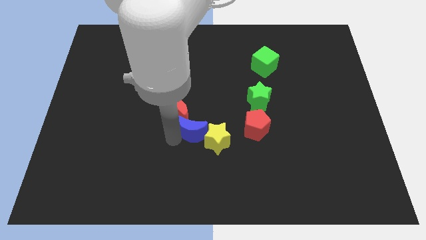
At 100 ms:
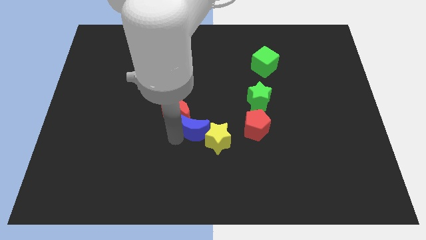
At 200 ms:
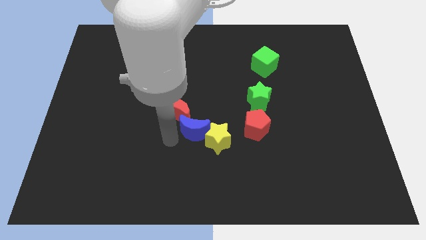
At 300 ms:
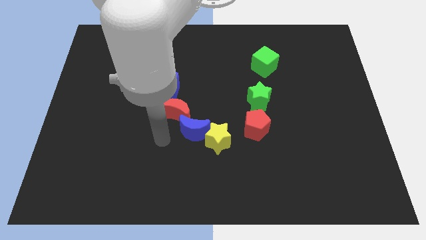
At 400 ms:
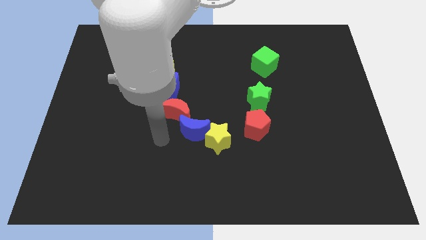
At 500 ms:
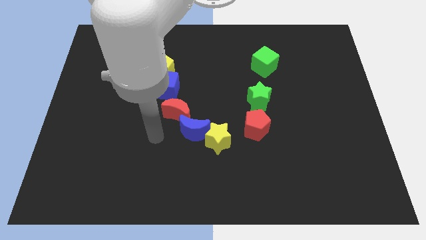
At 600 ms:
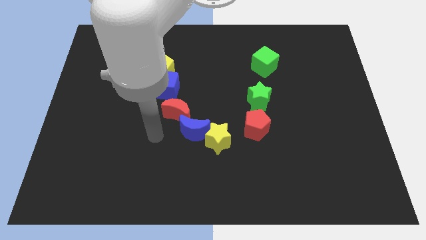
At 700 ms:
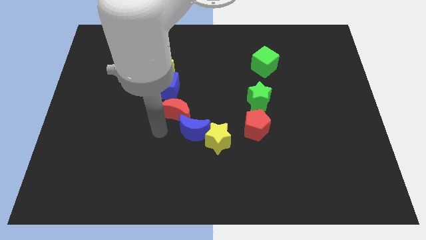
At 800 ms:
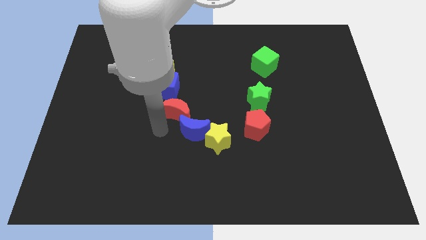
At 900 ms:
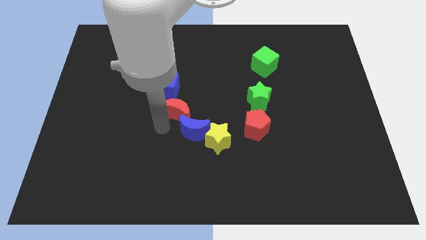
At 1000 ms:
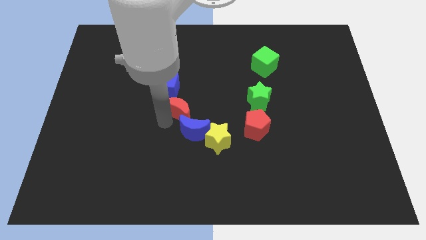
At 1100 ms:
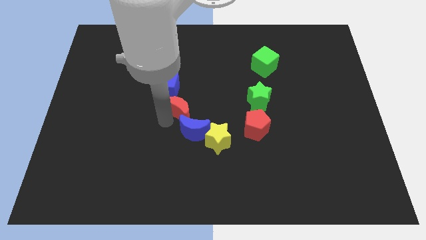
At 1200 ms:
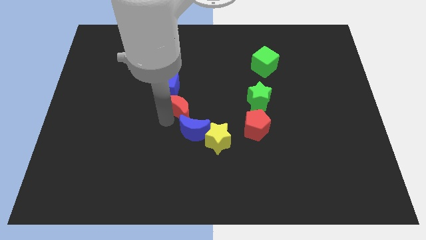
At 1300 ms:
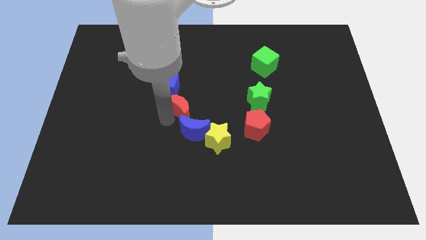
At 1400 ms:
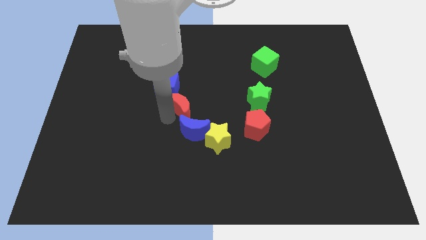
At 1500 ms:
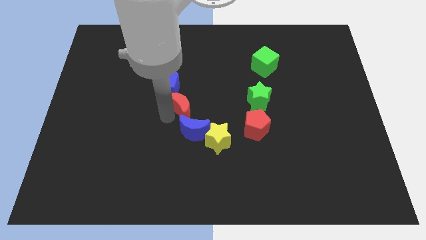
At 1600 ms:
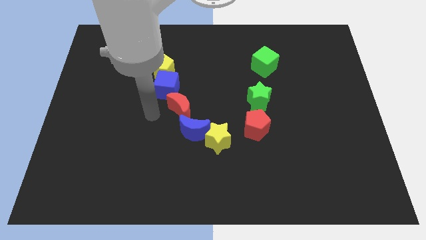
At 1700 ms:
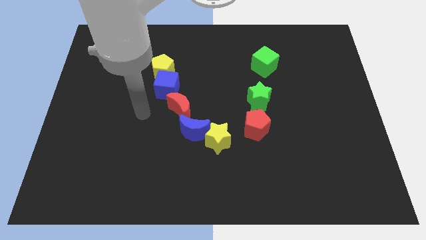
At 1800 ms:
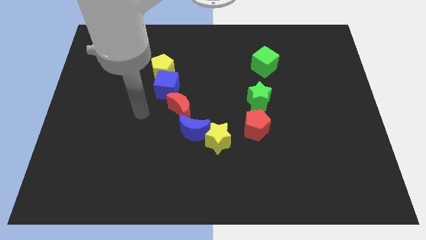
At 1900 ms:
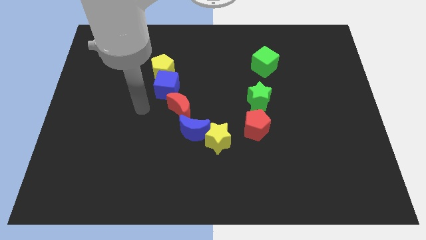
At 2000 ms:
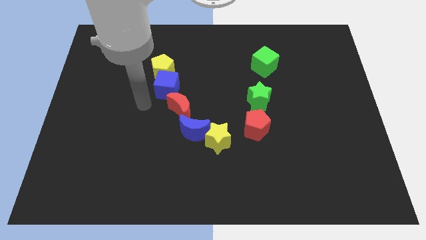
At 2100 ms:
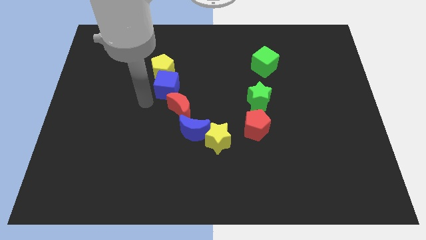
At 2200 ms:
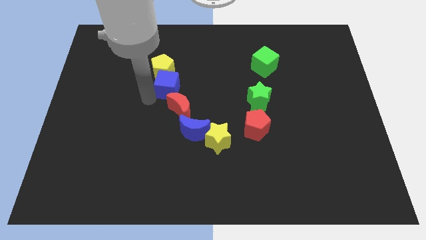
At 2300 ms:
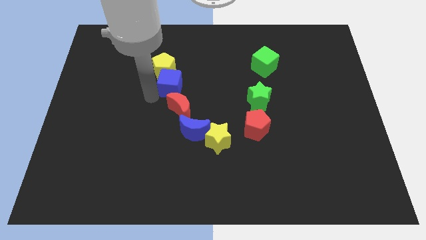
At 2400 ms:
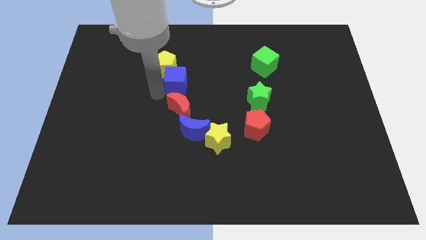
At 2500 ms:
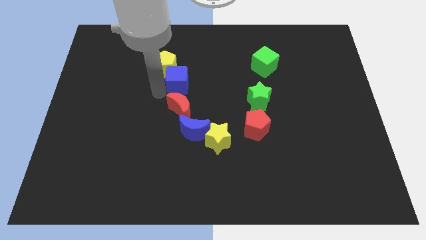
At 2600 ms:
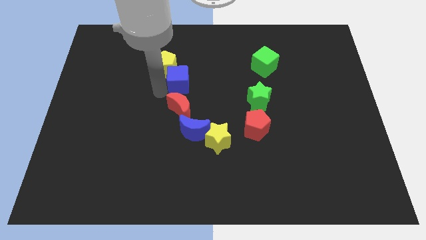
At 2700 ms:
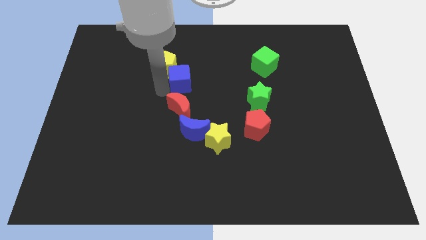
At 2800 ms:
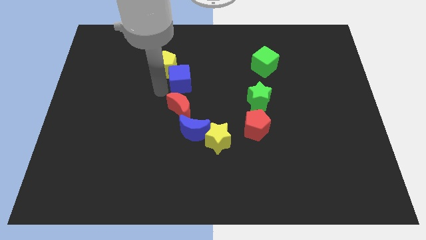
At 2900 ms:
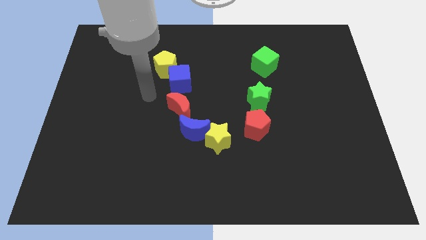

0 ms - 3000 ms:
point your arm to the left side of the blue cube

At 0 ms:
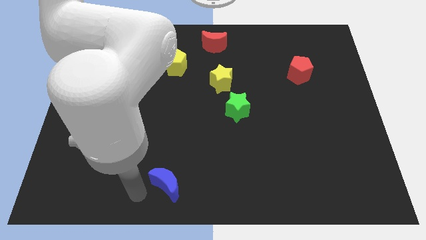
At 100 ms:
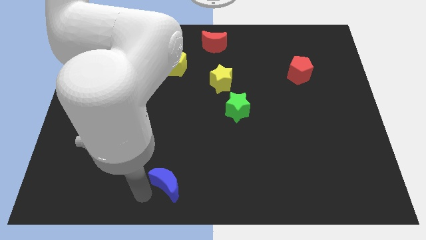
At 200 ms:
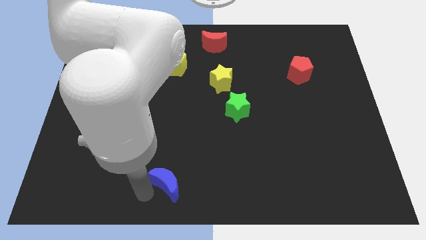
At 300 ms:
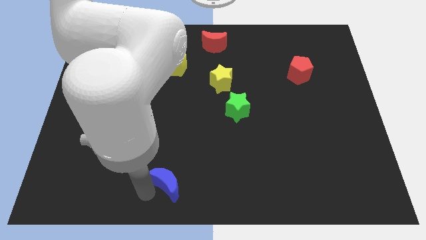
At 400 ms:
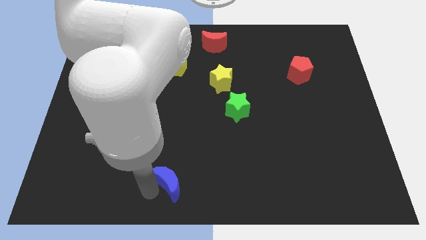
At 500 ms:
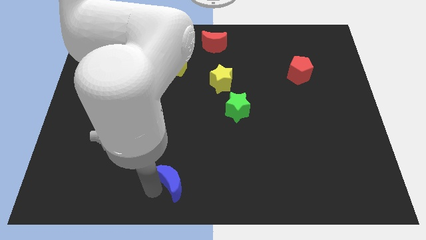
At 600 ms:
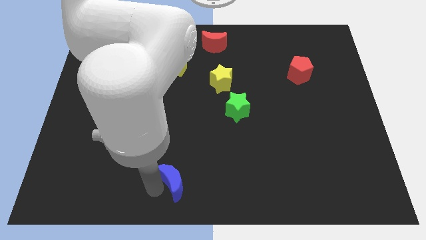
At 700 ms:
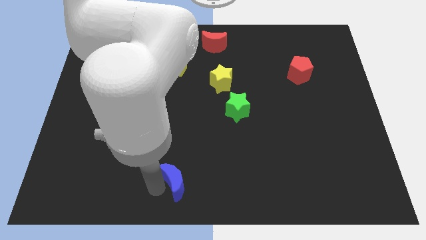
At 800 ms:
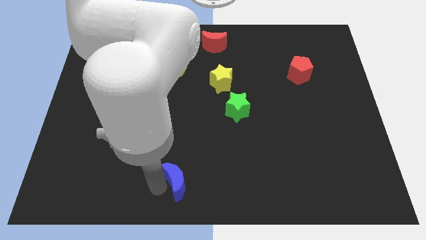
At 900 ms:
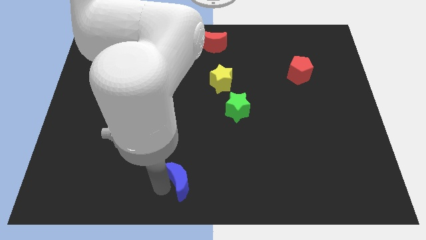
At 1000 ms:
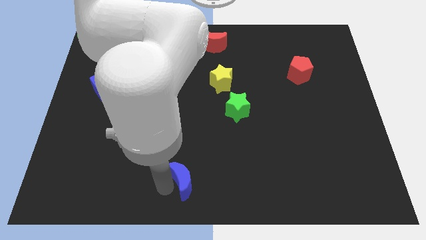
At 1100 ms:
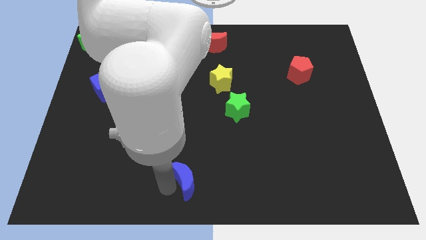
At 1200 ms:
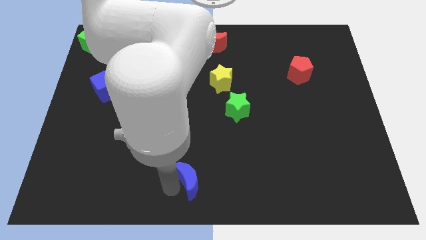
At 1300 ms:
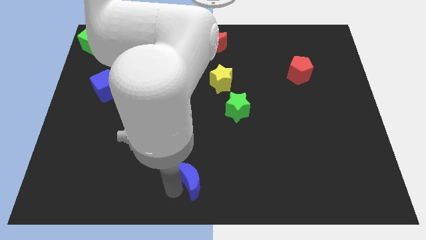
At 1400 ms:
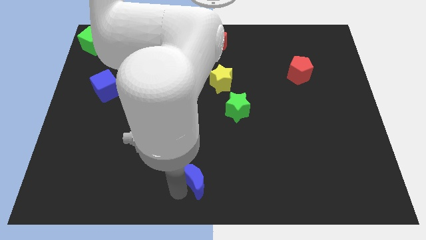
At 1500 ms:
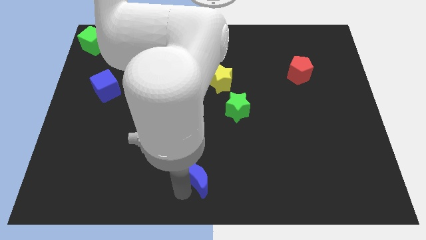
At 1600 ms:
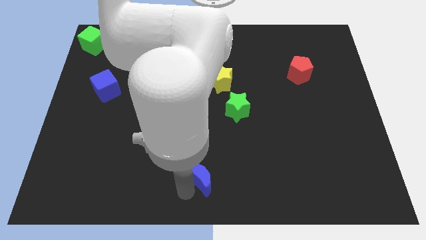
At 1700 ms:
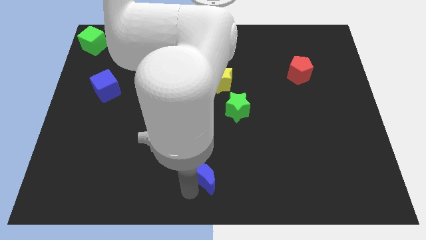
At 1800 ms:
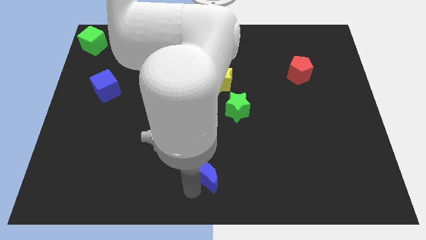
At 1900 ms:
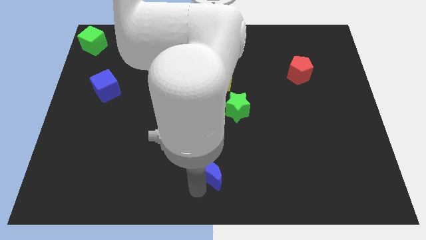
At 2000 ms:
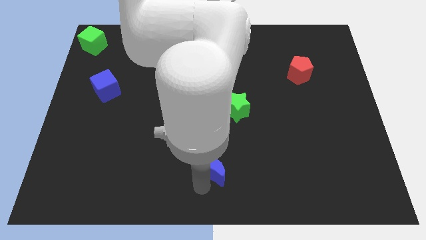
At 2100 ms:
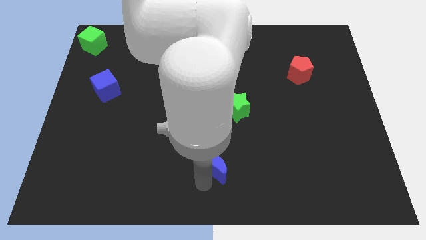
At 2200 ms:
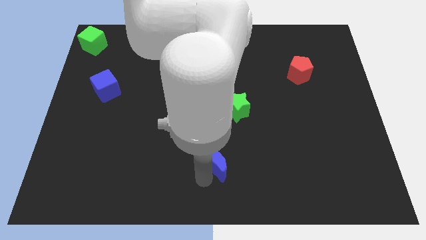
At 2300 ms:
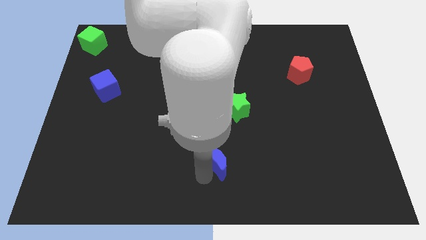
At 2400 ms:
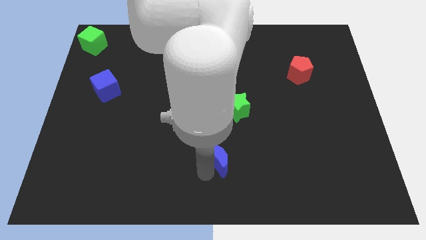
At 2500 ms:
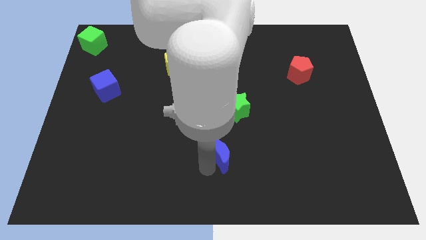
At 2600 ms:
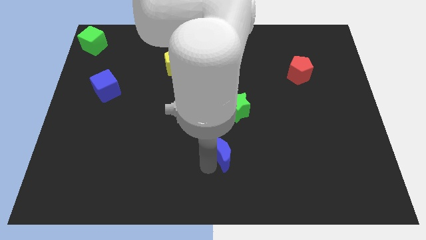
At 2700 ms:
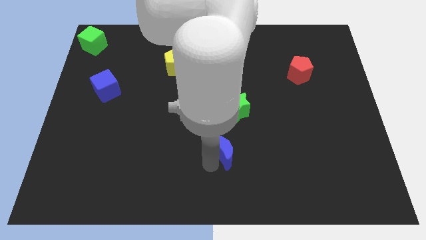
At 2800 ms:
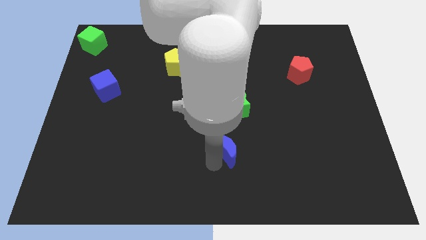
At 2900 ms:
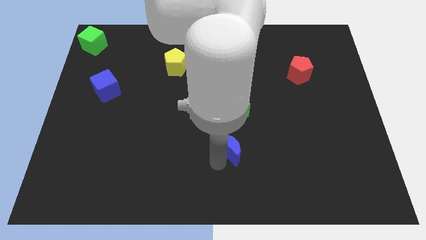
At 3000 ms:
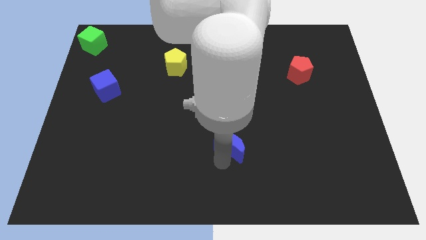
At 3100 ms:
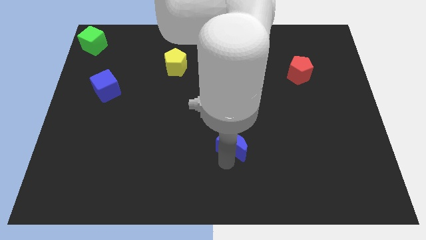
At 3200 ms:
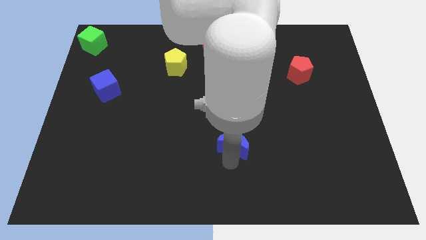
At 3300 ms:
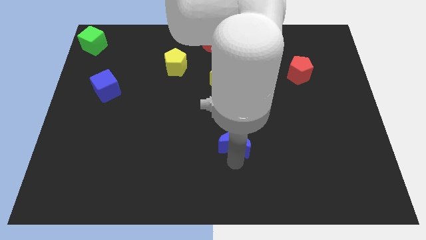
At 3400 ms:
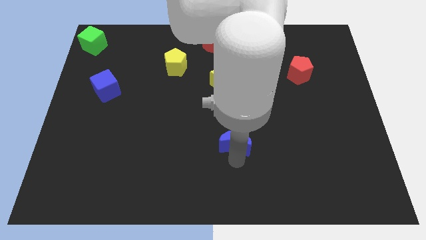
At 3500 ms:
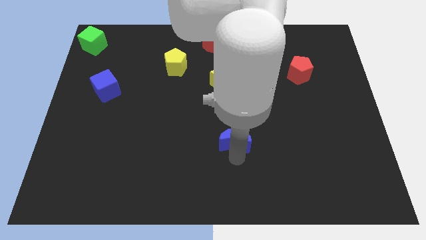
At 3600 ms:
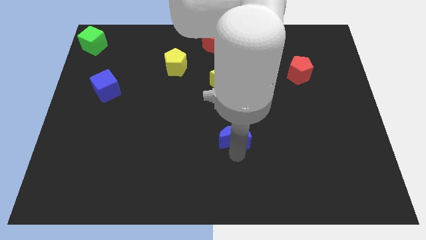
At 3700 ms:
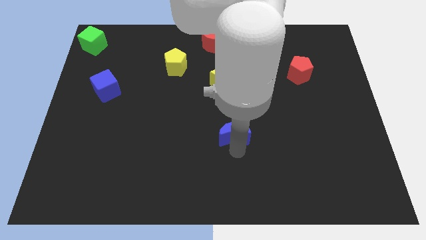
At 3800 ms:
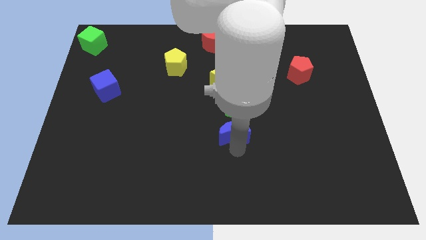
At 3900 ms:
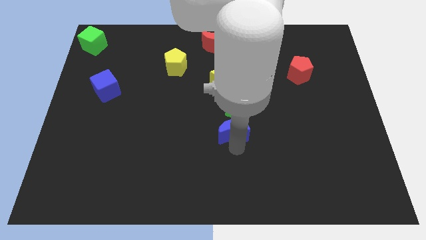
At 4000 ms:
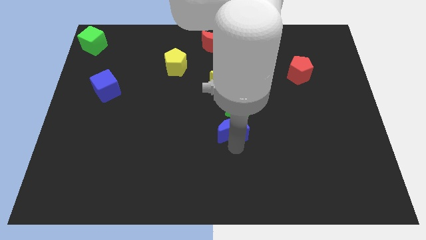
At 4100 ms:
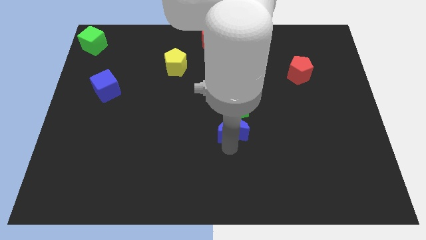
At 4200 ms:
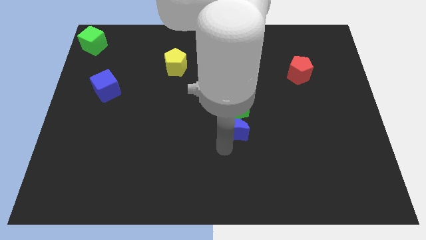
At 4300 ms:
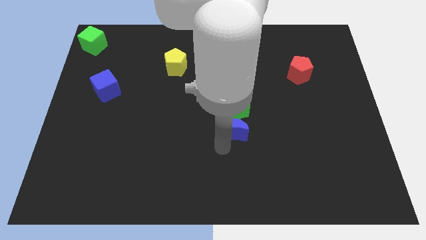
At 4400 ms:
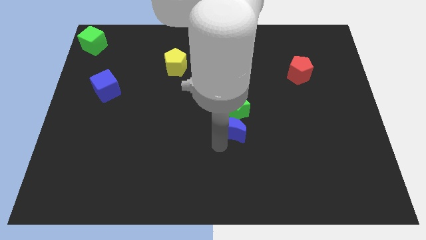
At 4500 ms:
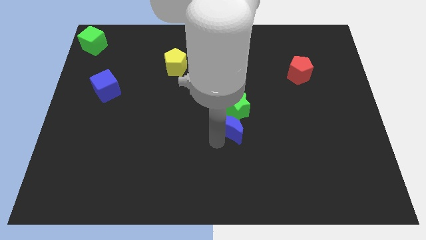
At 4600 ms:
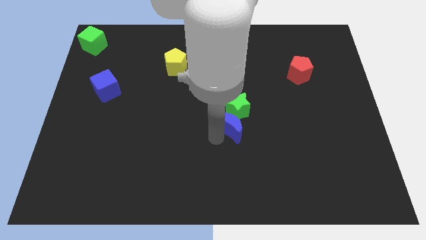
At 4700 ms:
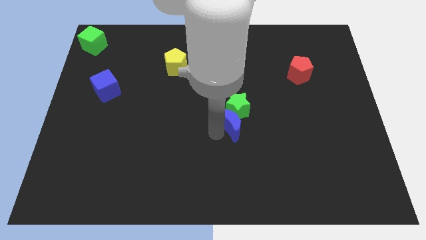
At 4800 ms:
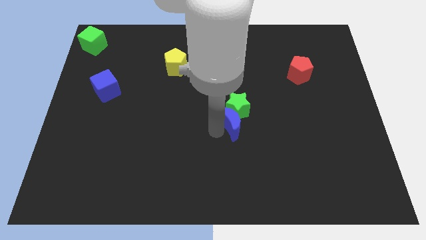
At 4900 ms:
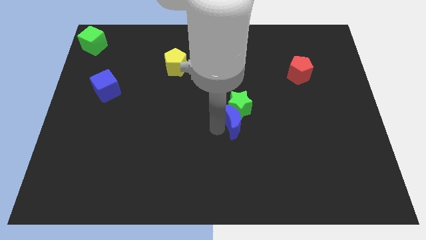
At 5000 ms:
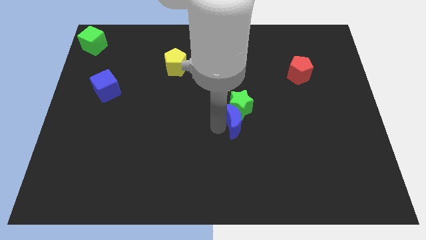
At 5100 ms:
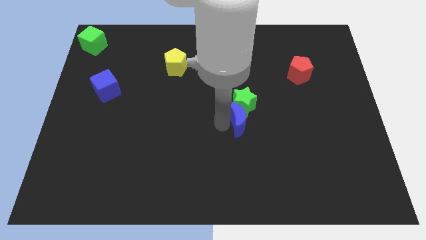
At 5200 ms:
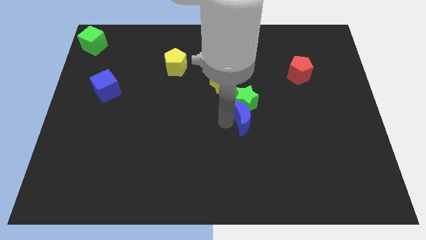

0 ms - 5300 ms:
slide the blue crescent into the bottom side of the green star

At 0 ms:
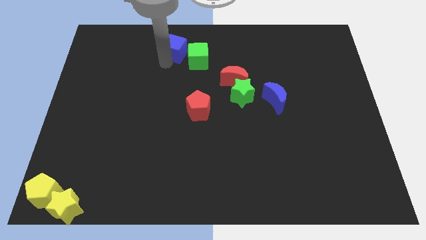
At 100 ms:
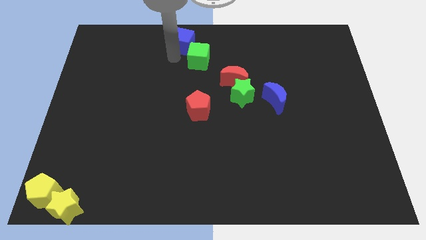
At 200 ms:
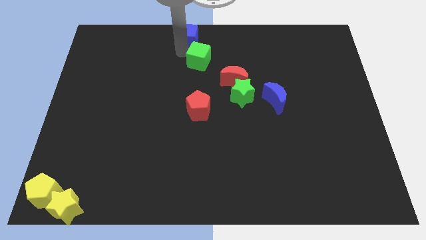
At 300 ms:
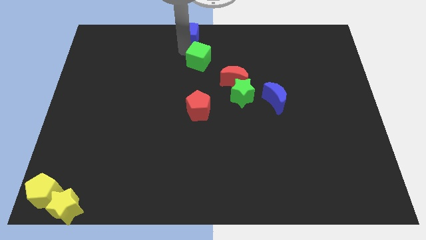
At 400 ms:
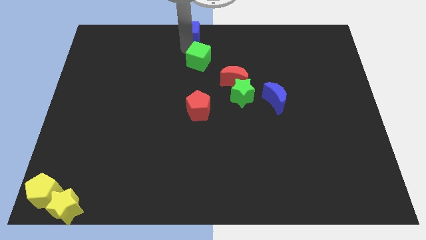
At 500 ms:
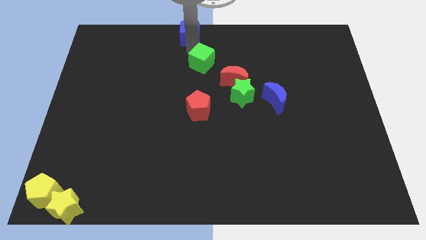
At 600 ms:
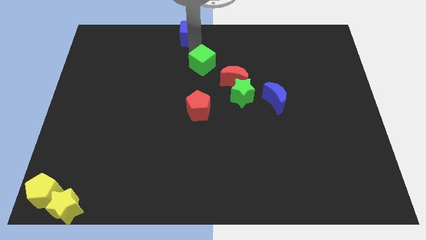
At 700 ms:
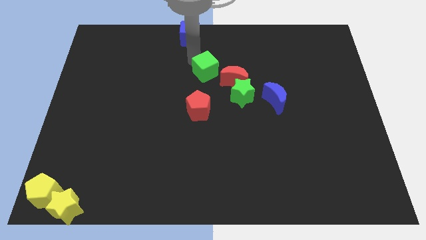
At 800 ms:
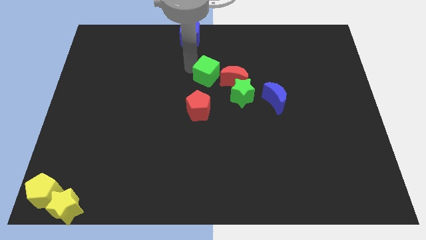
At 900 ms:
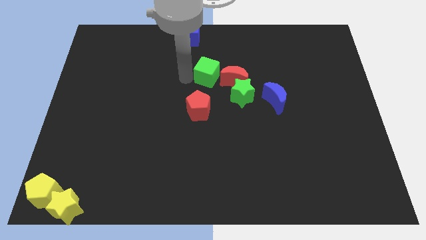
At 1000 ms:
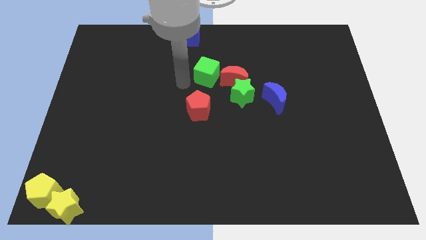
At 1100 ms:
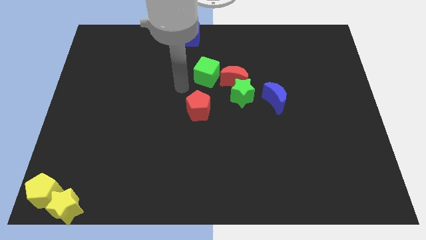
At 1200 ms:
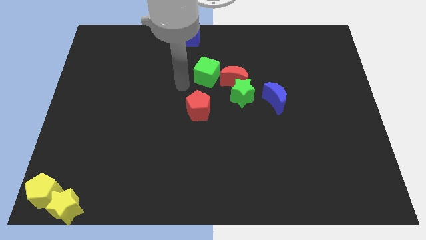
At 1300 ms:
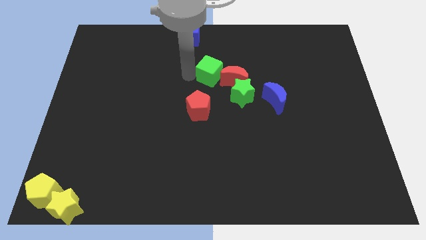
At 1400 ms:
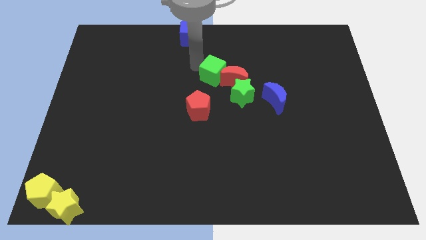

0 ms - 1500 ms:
push the green cube into the red crescent
